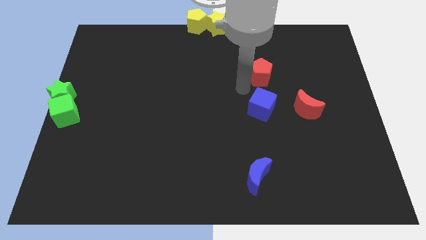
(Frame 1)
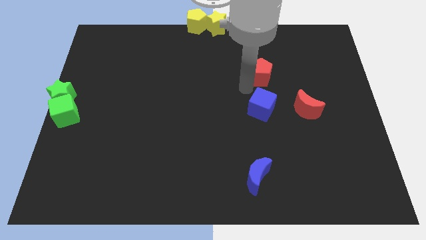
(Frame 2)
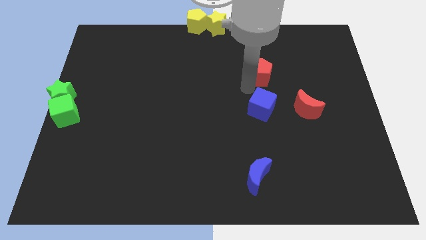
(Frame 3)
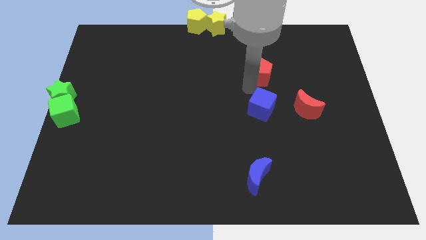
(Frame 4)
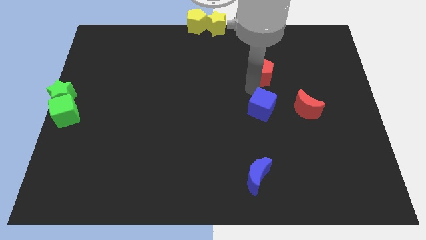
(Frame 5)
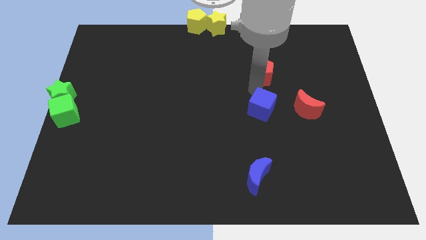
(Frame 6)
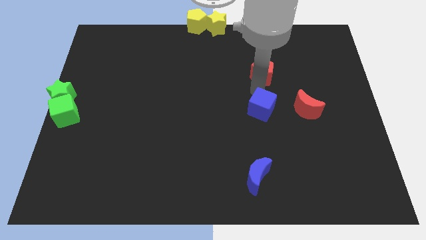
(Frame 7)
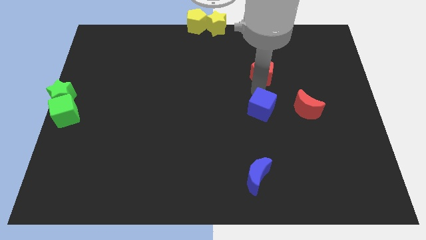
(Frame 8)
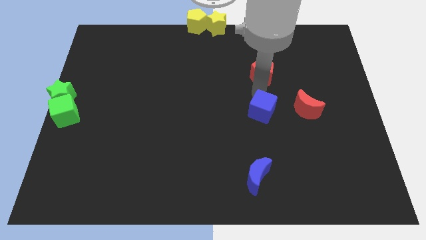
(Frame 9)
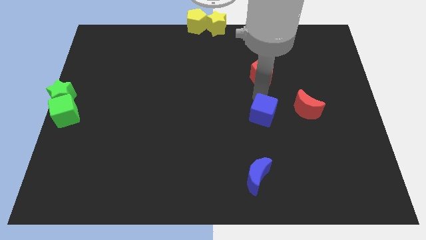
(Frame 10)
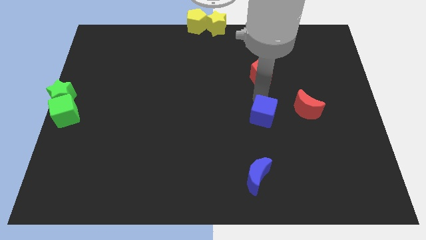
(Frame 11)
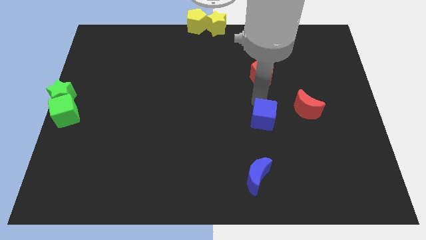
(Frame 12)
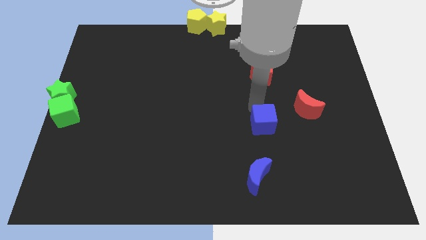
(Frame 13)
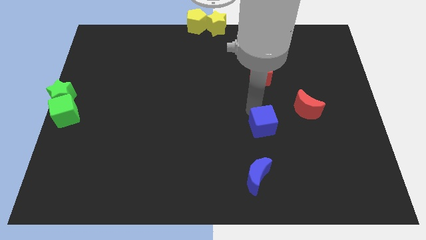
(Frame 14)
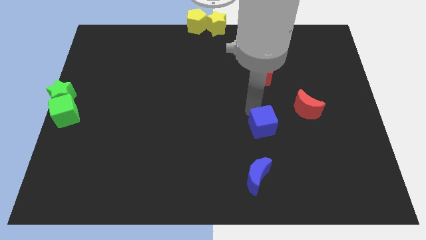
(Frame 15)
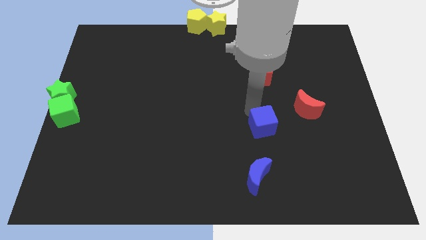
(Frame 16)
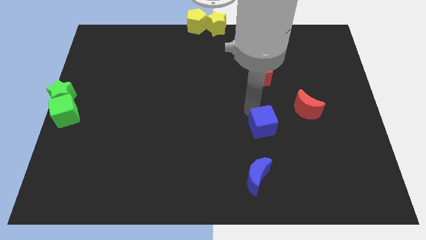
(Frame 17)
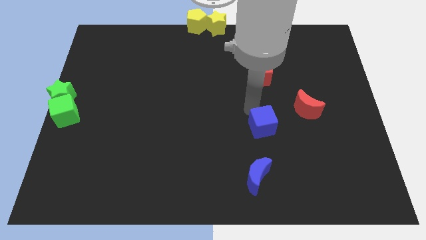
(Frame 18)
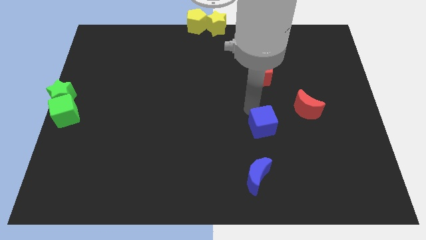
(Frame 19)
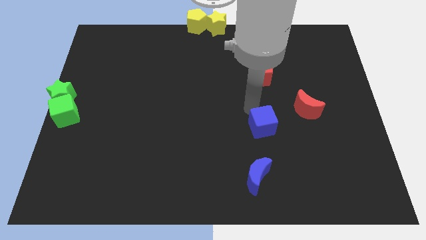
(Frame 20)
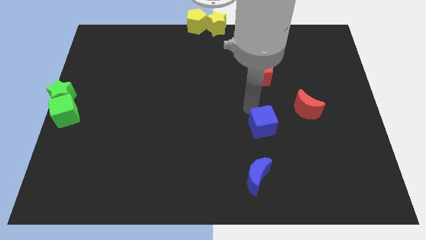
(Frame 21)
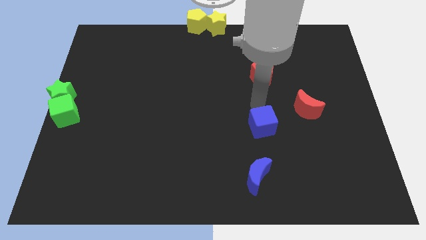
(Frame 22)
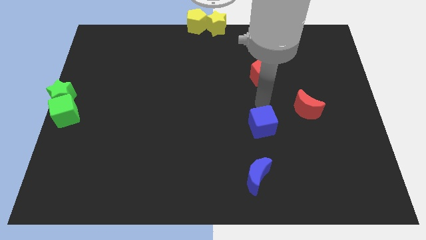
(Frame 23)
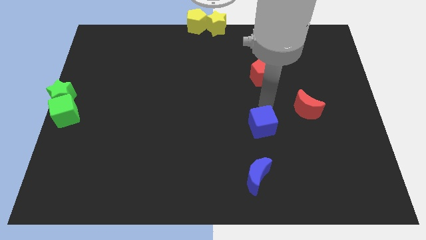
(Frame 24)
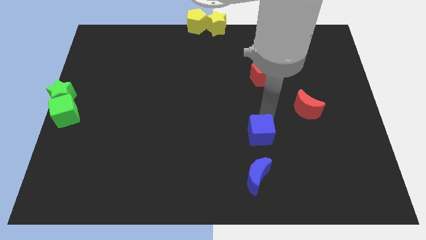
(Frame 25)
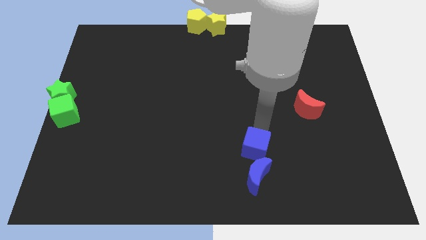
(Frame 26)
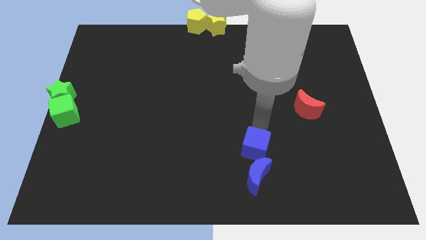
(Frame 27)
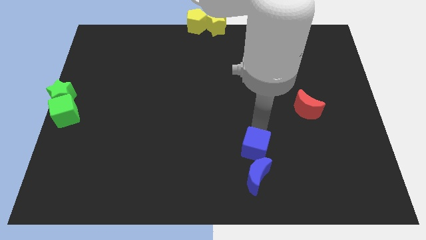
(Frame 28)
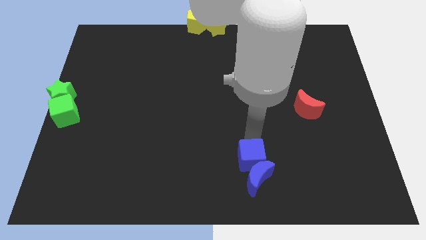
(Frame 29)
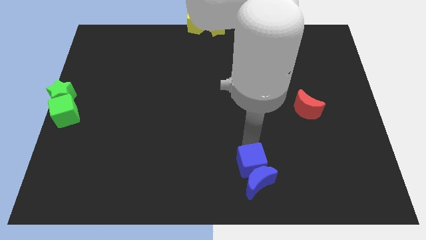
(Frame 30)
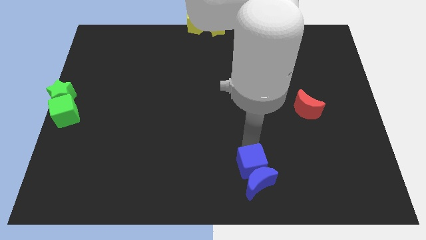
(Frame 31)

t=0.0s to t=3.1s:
slide the blue cube to the top of the blue moon

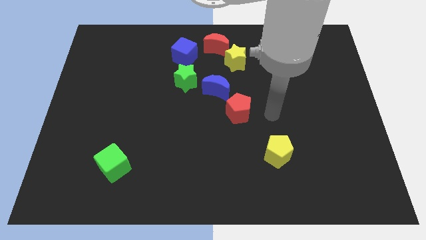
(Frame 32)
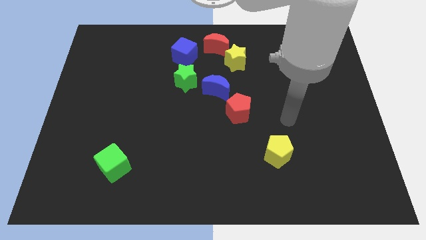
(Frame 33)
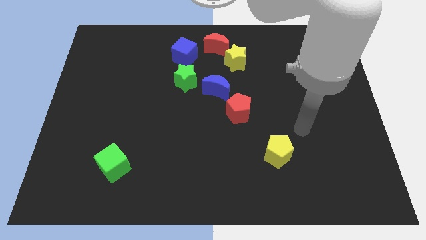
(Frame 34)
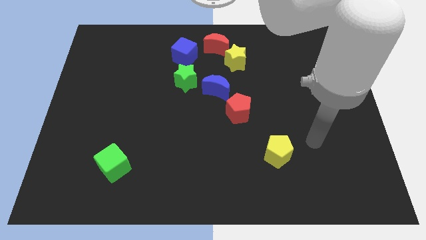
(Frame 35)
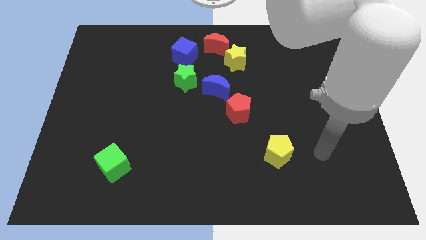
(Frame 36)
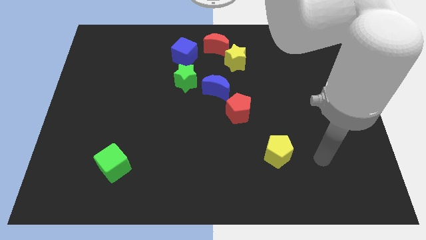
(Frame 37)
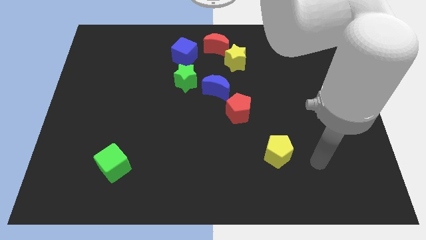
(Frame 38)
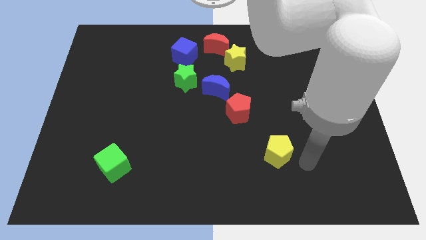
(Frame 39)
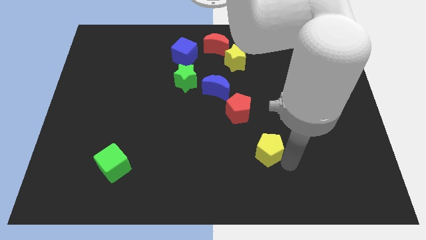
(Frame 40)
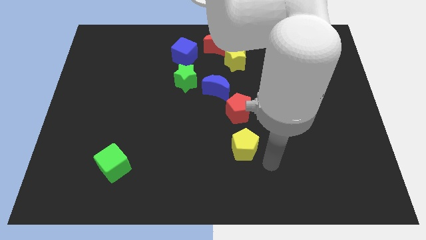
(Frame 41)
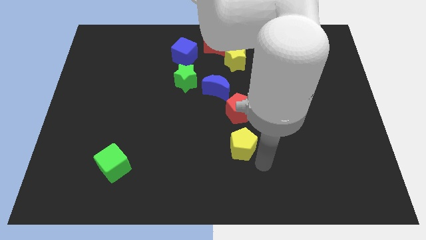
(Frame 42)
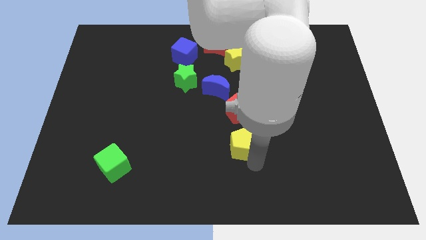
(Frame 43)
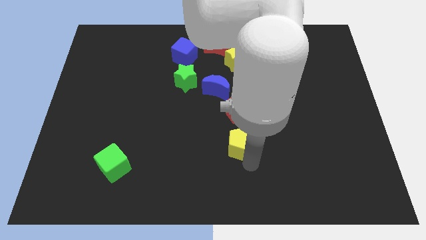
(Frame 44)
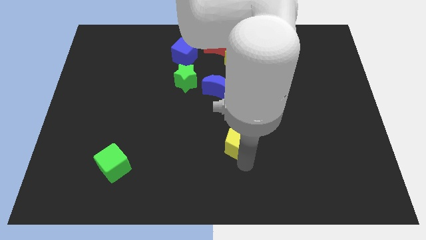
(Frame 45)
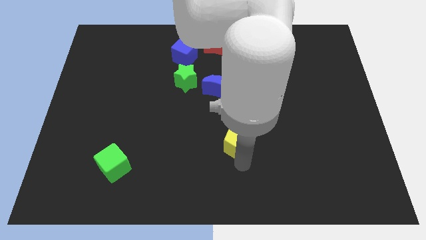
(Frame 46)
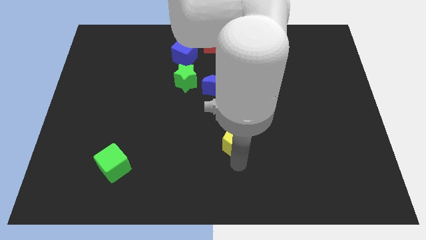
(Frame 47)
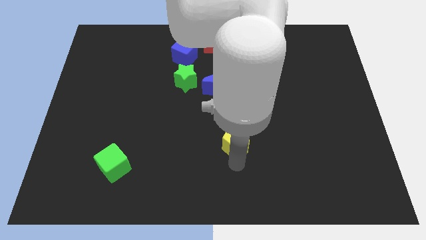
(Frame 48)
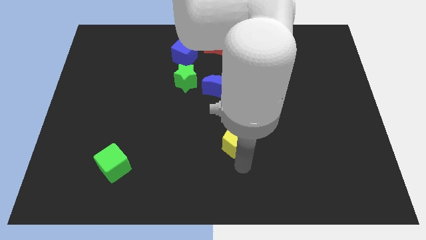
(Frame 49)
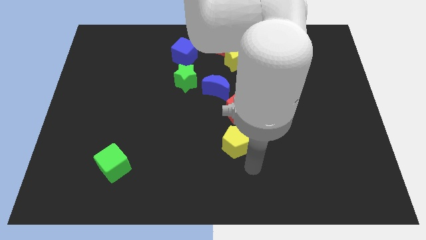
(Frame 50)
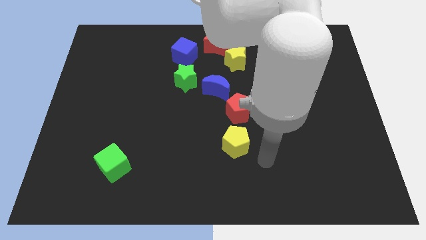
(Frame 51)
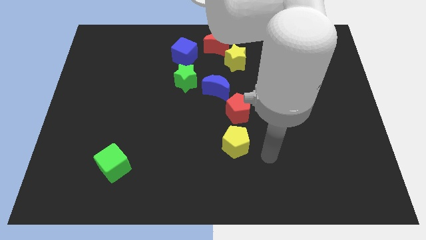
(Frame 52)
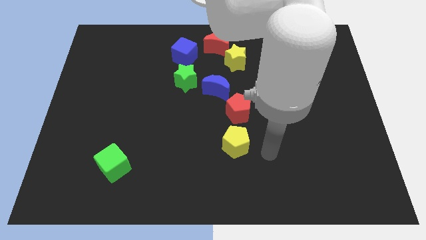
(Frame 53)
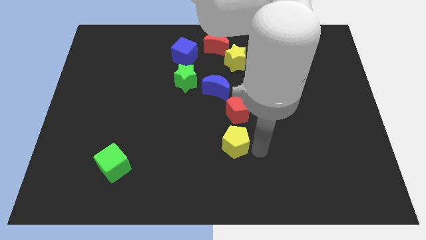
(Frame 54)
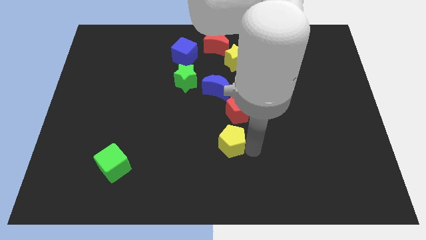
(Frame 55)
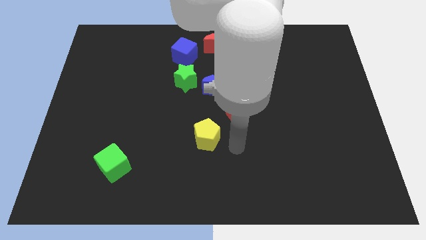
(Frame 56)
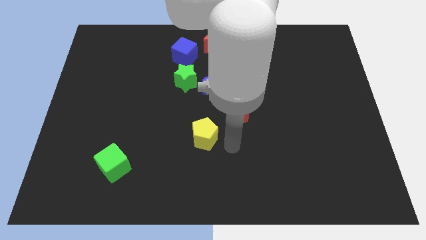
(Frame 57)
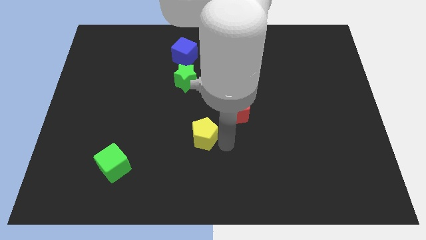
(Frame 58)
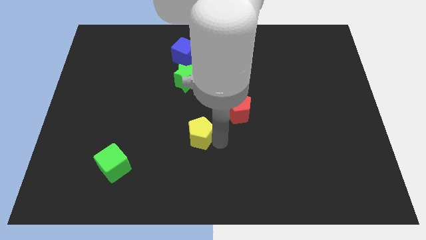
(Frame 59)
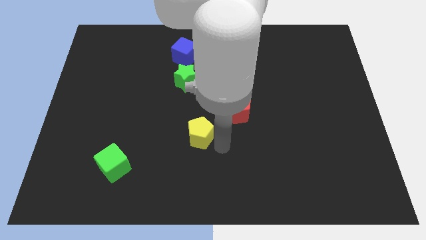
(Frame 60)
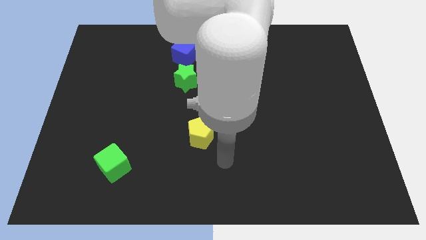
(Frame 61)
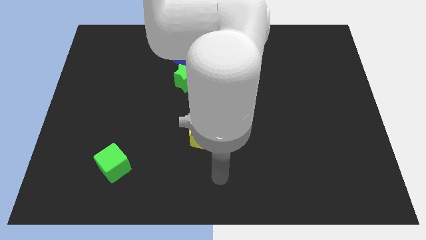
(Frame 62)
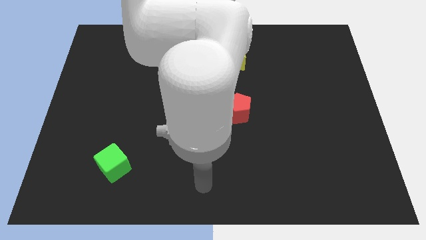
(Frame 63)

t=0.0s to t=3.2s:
push the yellow pentagon diagonal to the red pentagon

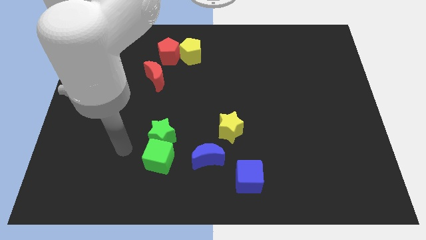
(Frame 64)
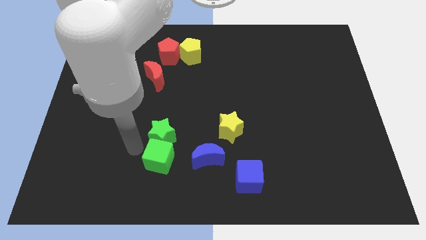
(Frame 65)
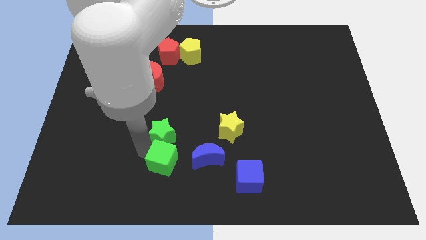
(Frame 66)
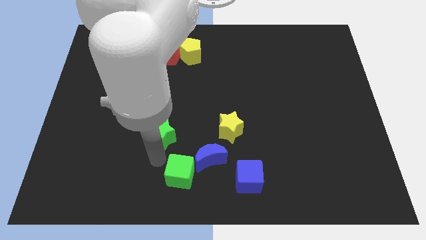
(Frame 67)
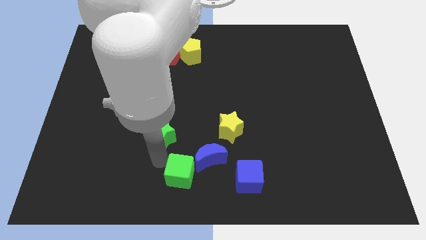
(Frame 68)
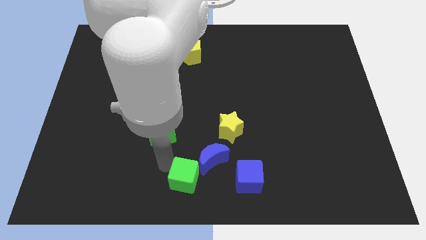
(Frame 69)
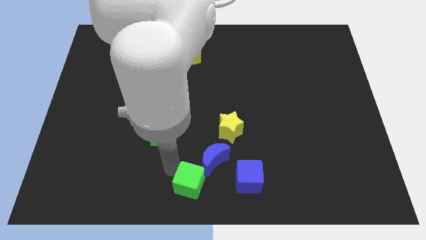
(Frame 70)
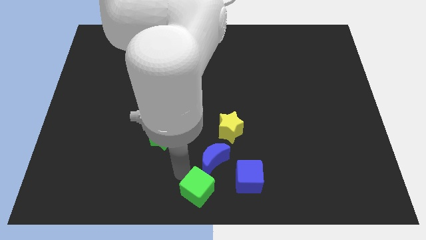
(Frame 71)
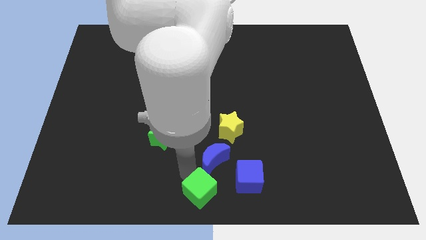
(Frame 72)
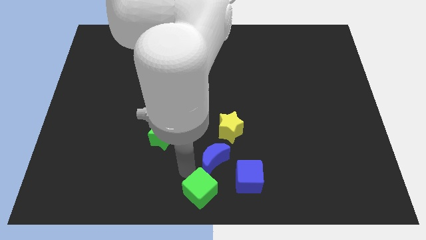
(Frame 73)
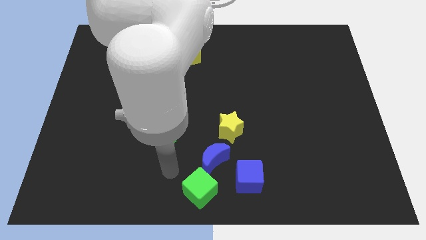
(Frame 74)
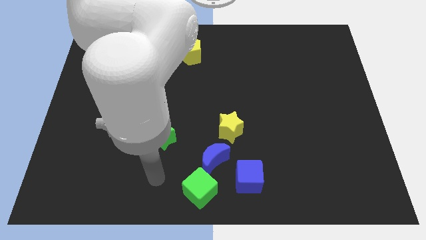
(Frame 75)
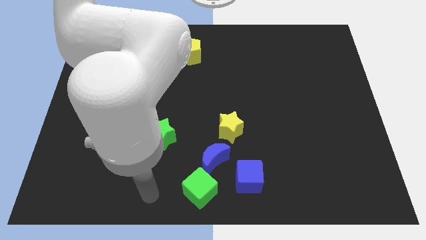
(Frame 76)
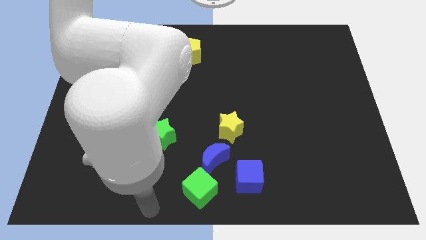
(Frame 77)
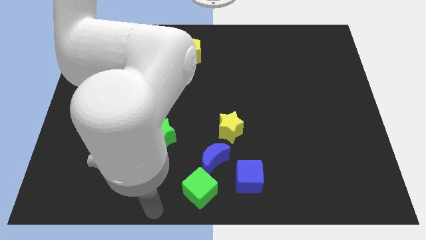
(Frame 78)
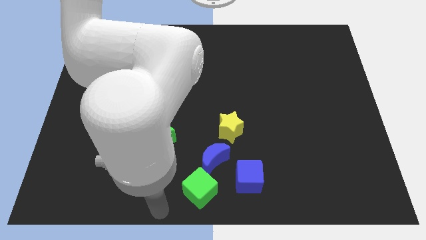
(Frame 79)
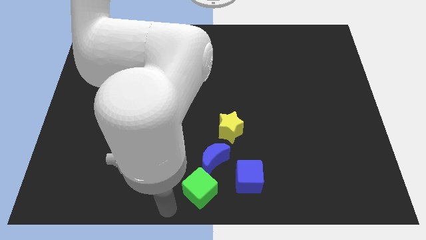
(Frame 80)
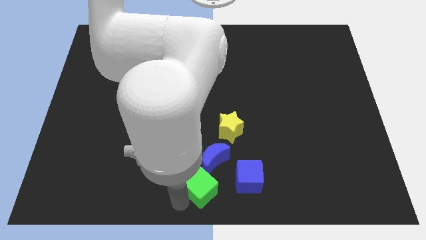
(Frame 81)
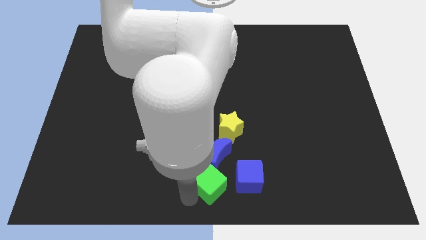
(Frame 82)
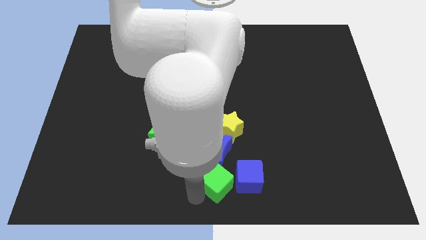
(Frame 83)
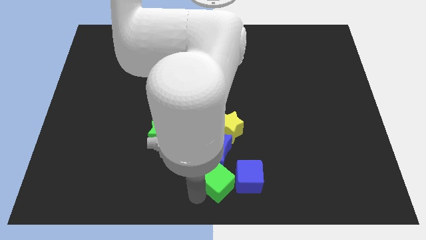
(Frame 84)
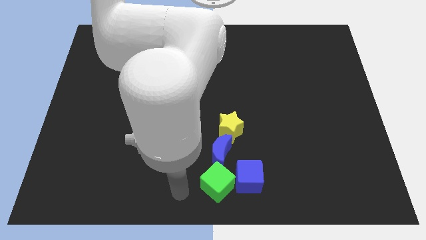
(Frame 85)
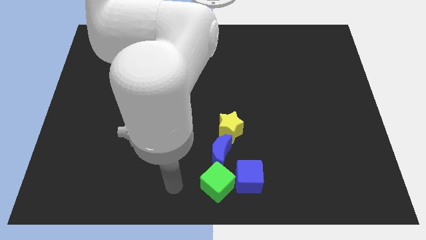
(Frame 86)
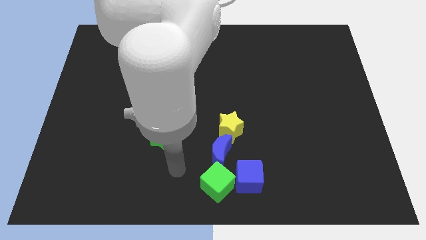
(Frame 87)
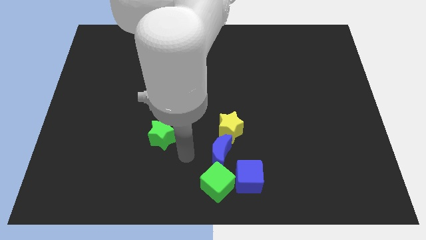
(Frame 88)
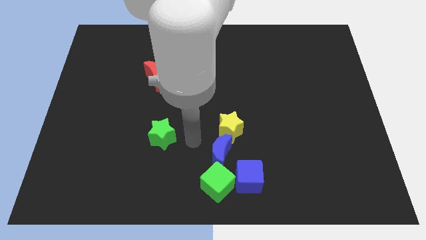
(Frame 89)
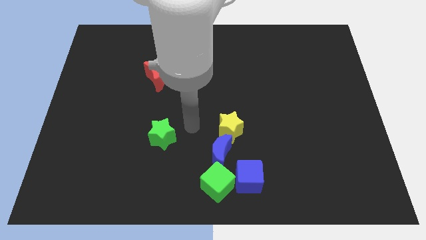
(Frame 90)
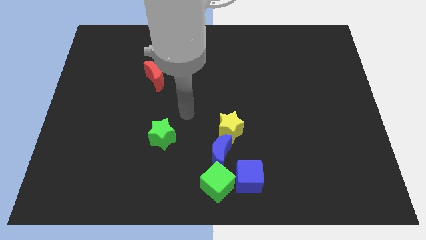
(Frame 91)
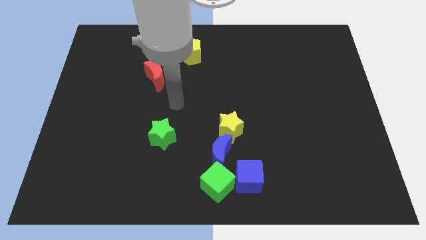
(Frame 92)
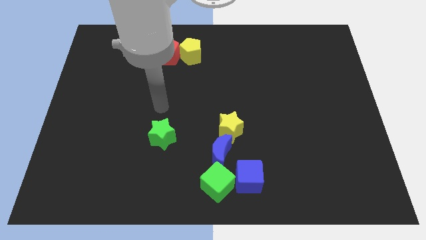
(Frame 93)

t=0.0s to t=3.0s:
move the green cube at the bottom of the blue crescent
